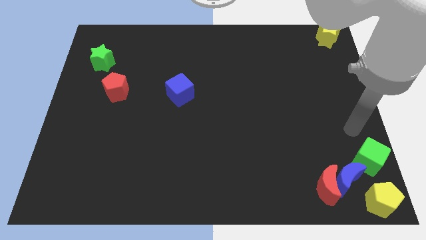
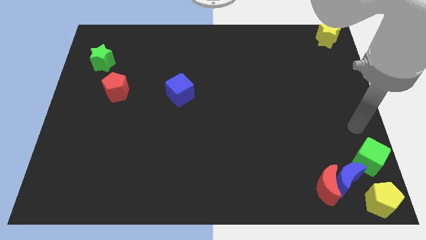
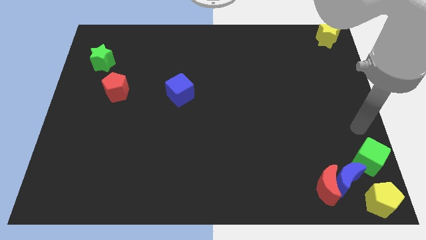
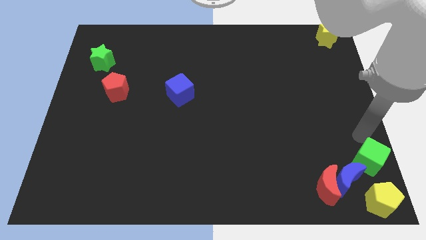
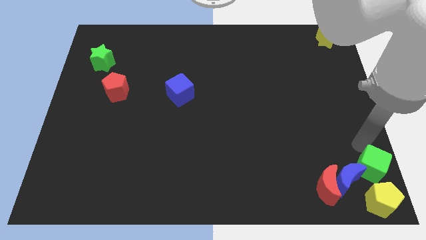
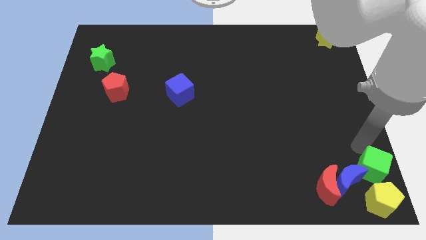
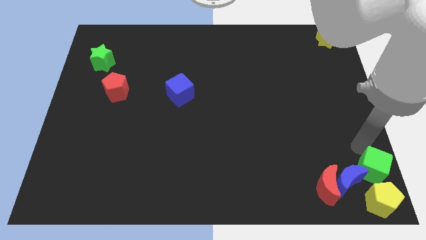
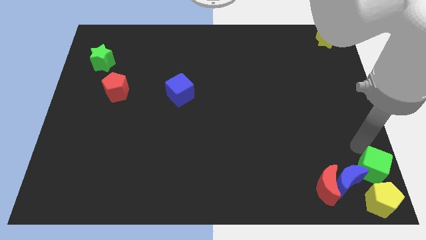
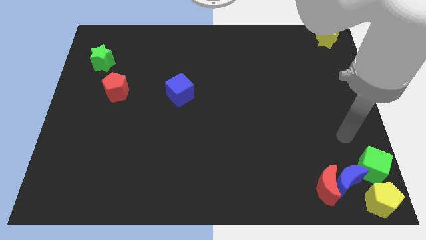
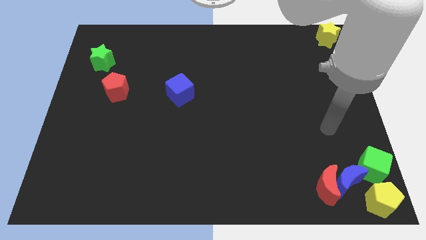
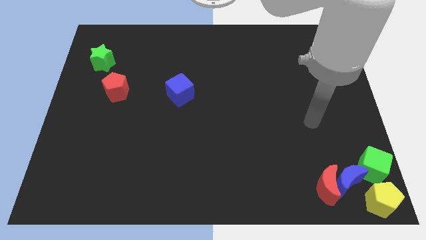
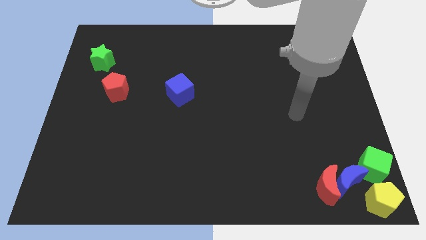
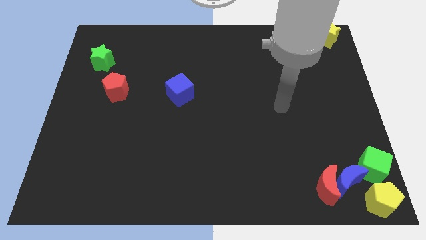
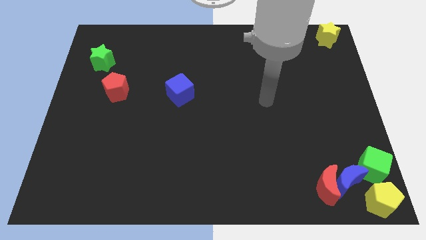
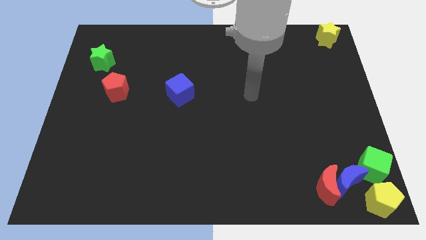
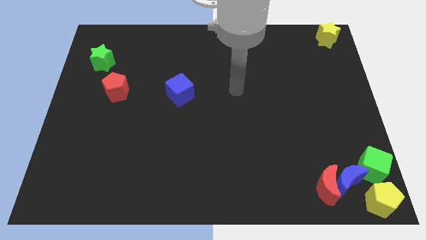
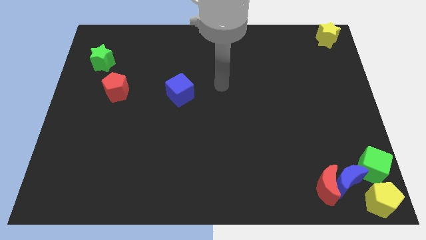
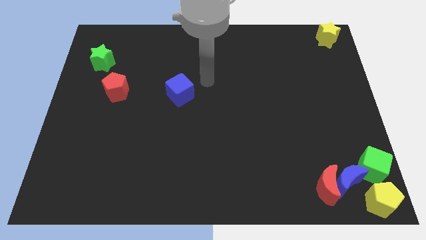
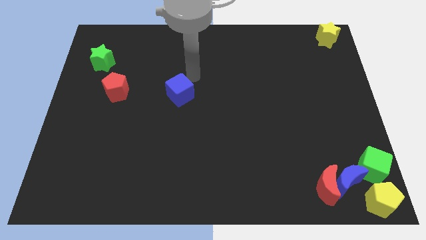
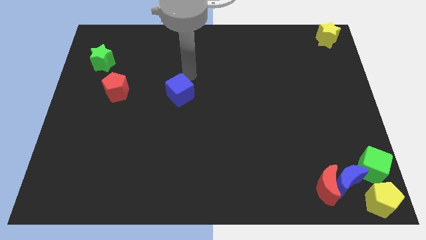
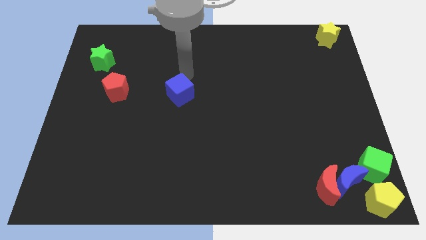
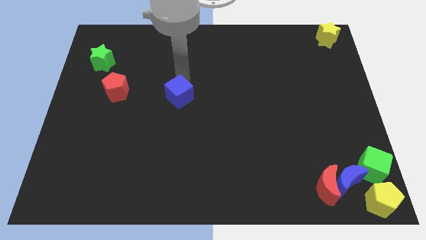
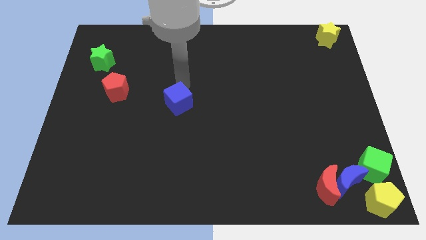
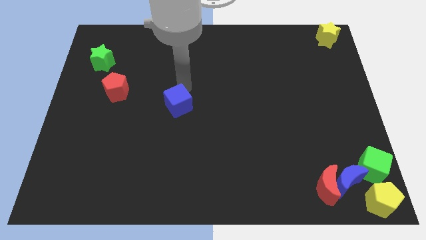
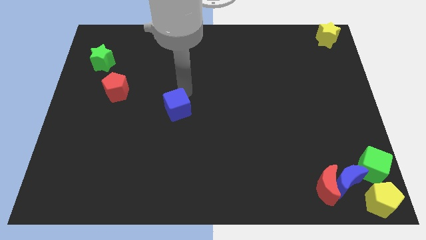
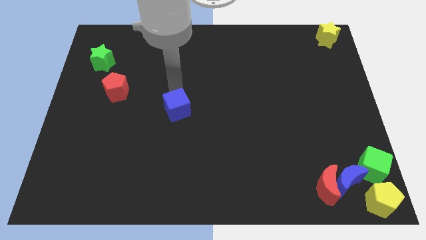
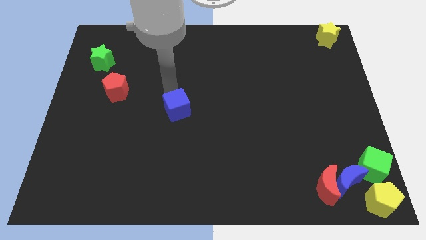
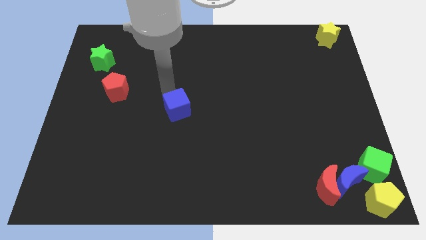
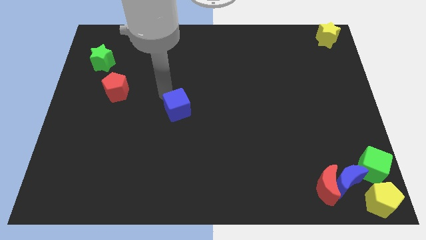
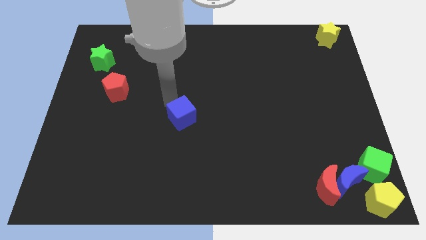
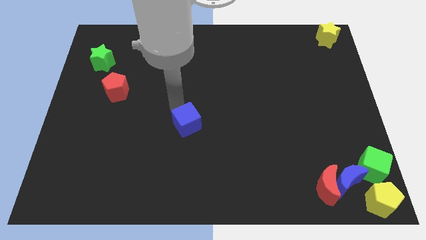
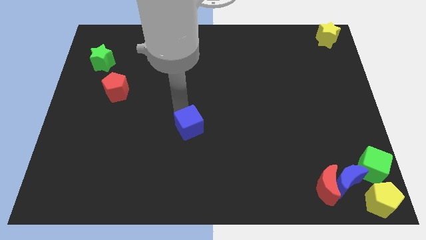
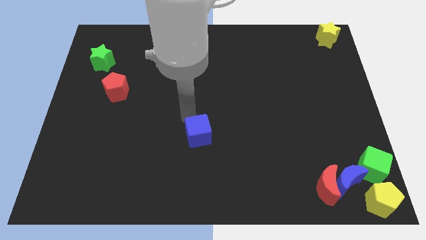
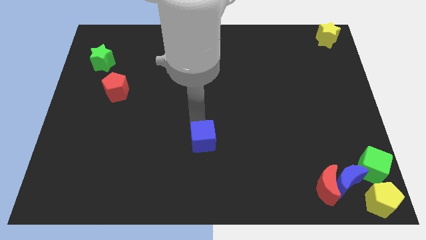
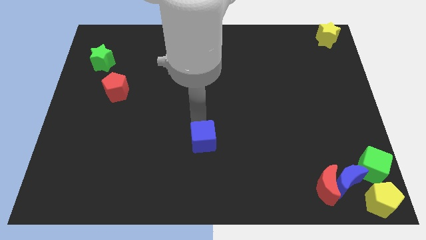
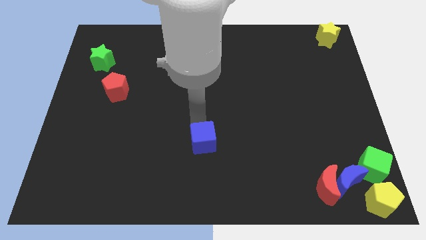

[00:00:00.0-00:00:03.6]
move the blue cube slightly bottom

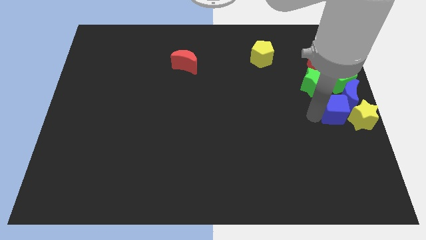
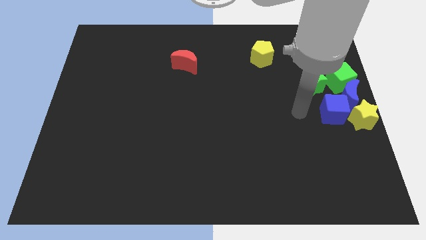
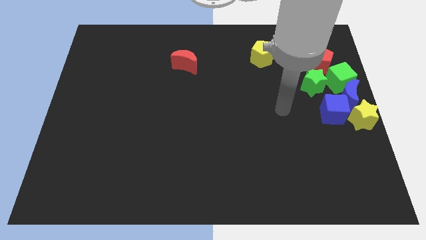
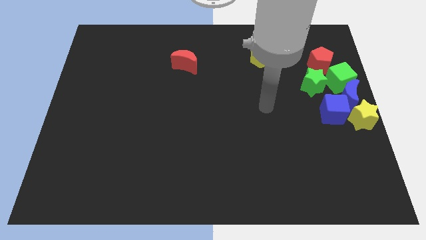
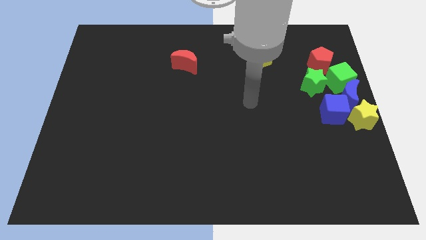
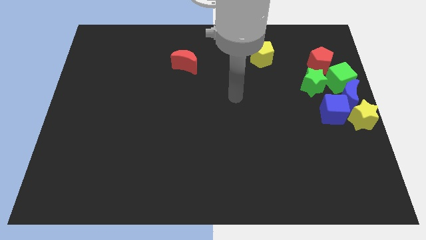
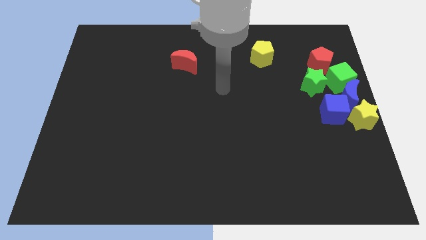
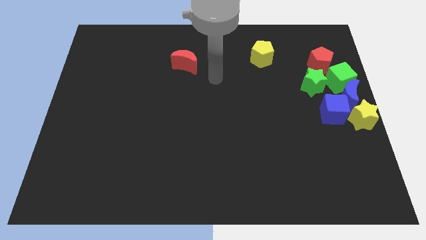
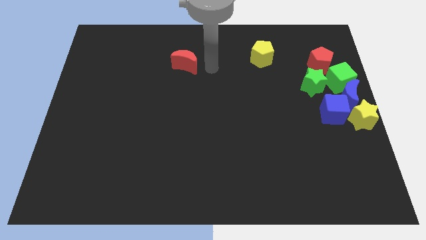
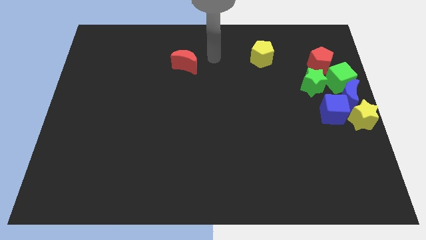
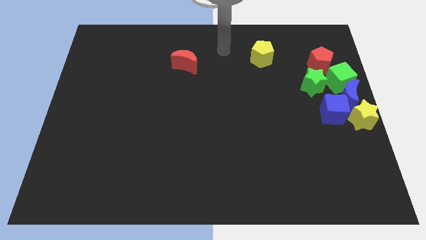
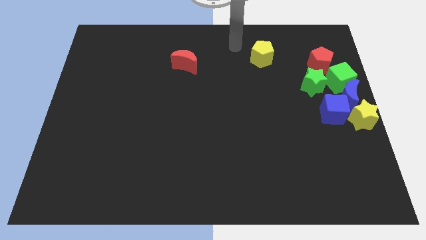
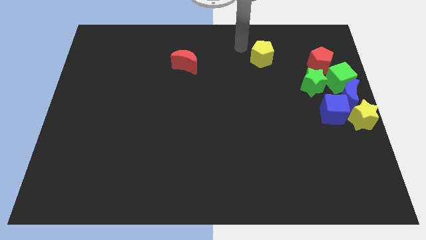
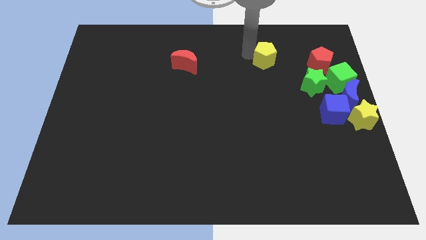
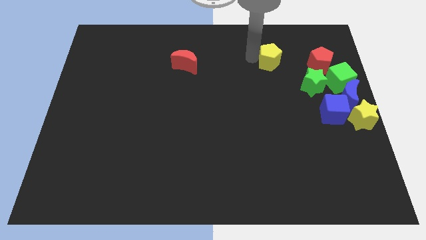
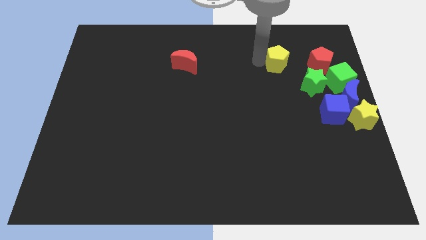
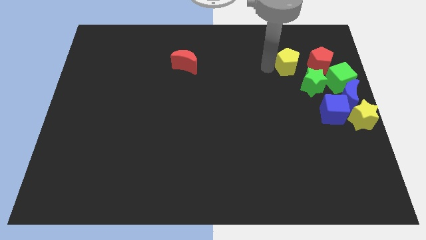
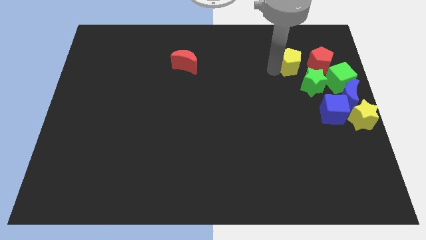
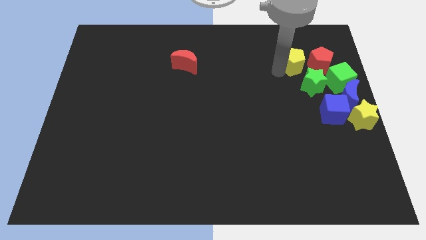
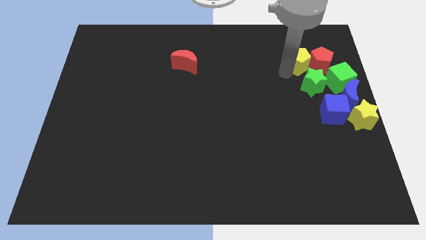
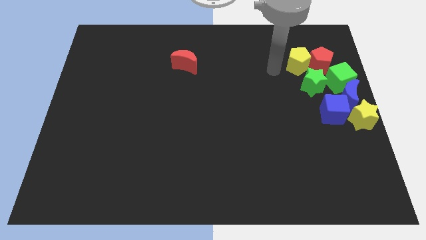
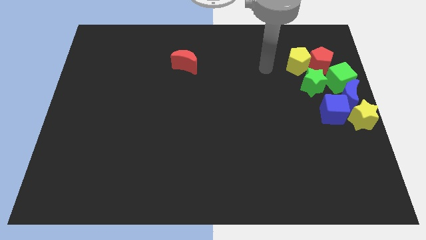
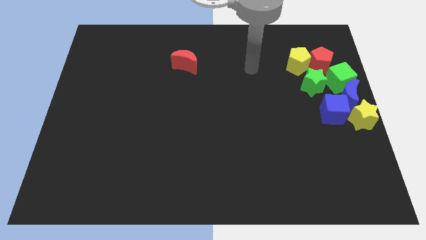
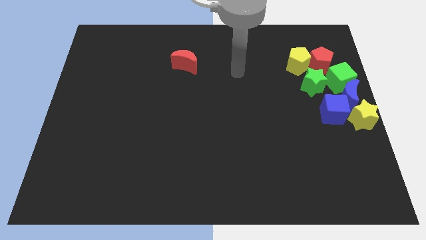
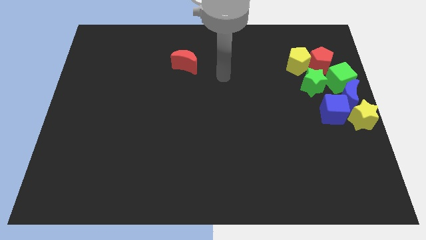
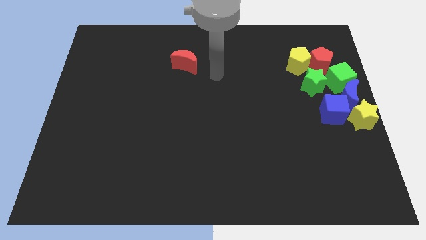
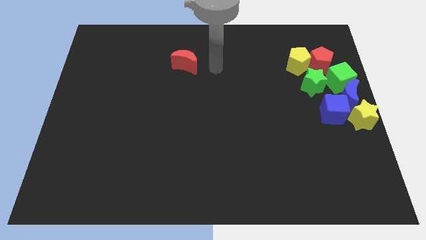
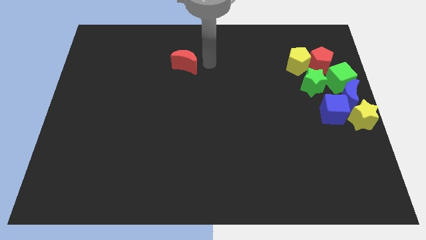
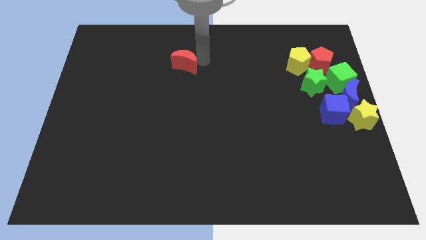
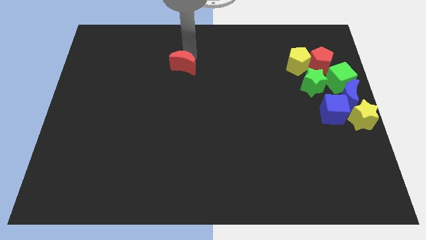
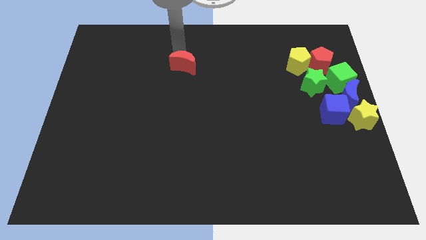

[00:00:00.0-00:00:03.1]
push the yellow pentagon towards the group of blocks

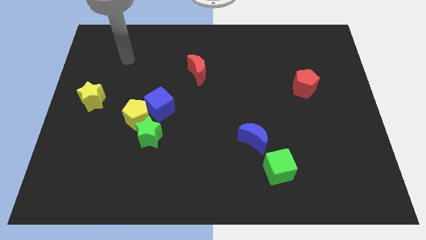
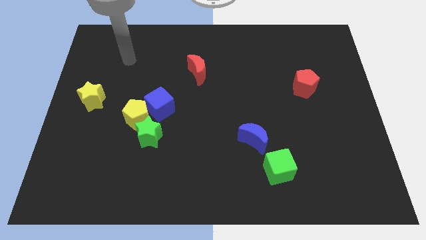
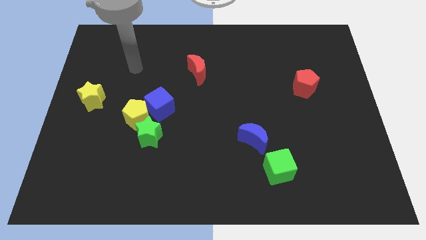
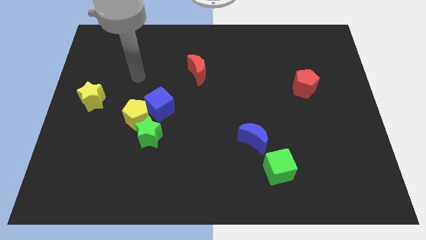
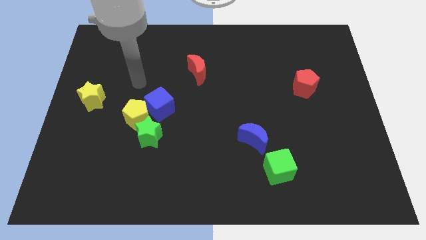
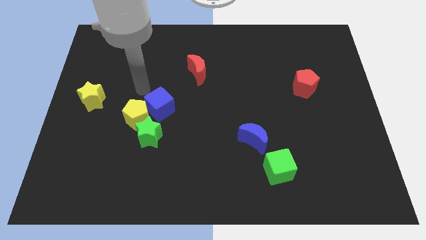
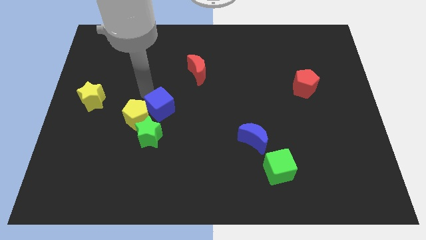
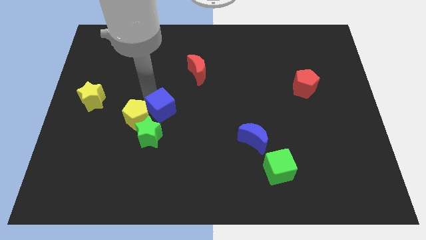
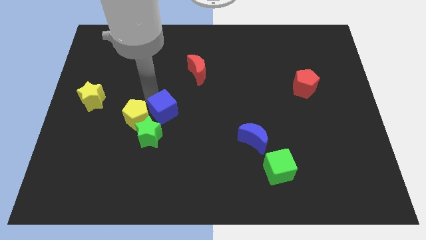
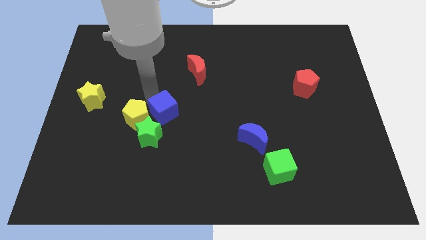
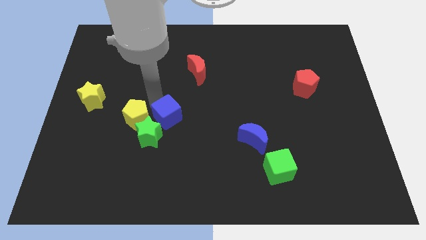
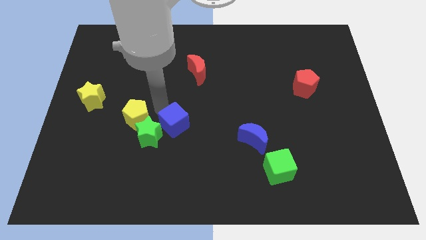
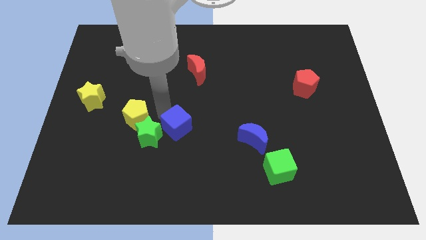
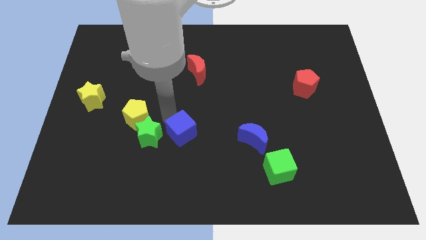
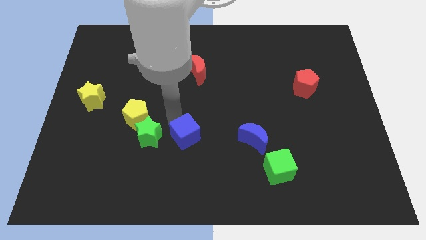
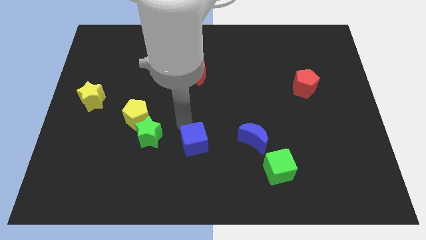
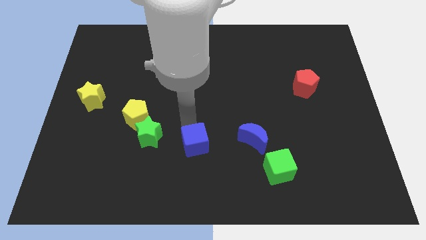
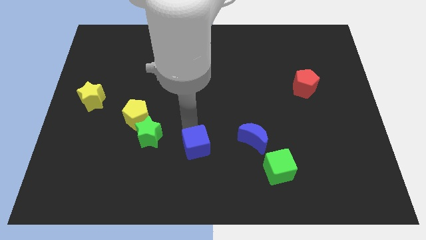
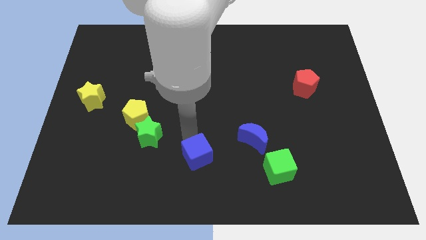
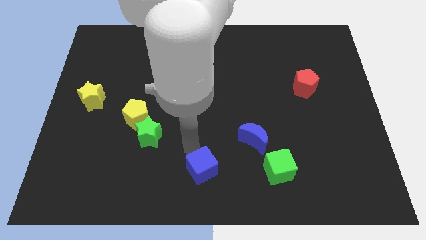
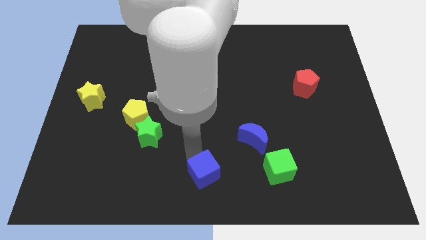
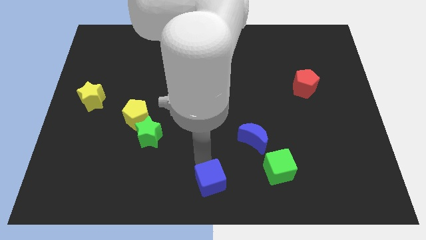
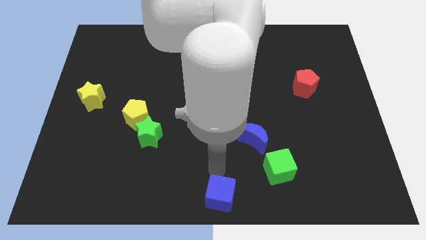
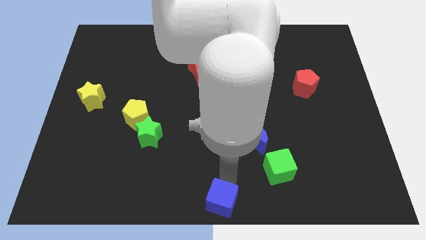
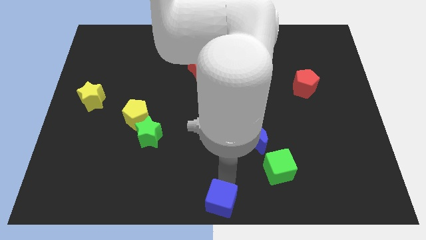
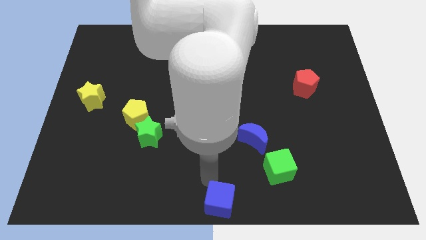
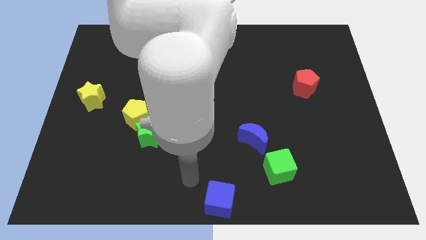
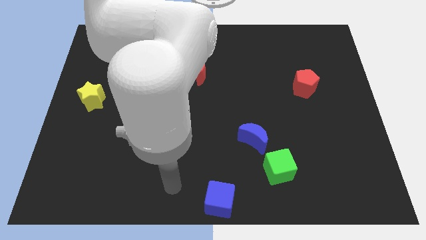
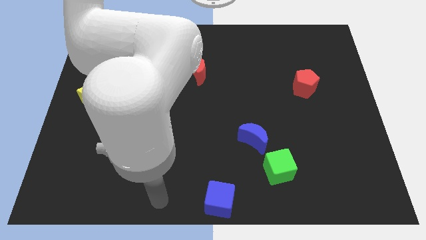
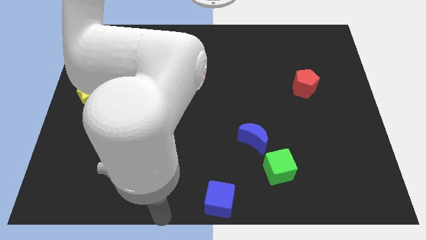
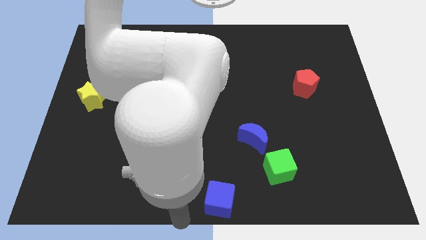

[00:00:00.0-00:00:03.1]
place blue cube at the bottom center
